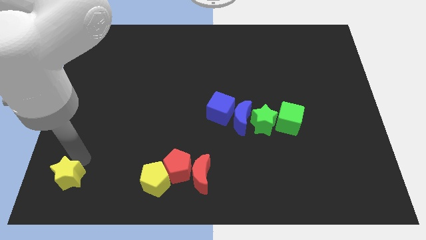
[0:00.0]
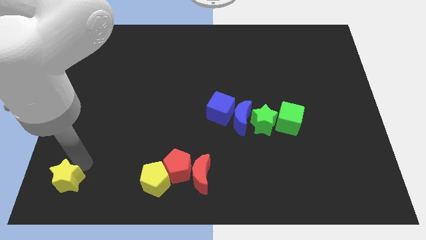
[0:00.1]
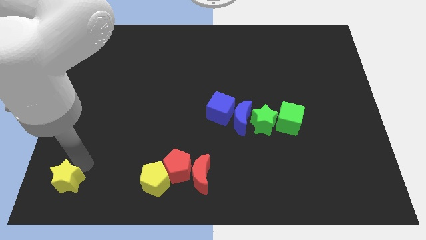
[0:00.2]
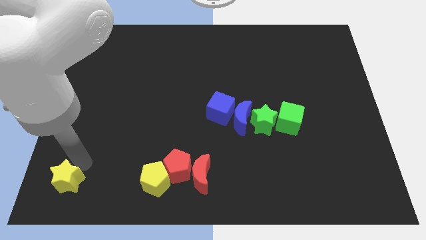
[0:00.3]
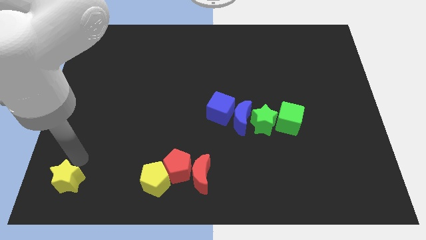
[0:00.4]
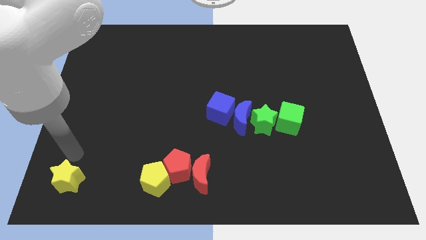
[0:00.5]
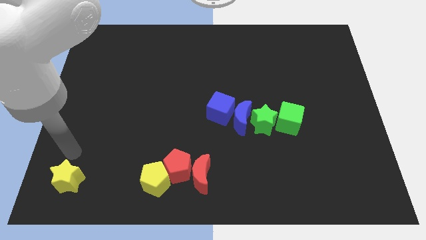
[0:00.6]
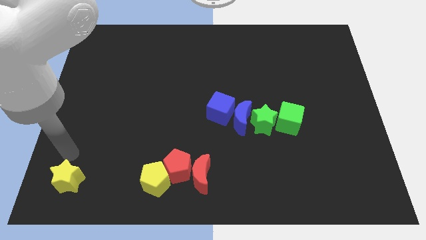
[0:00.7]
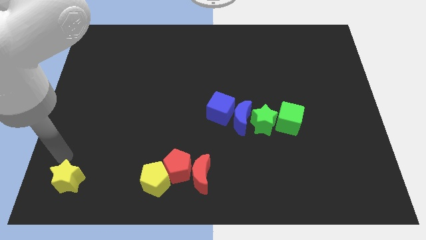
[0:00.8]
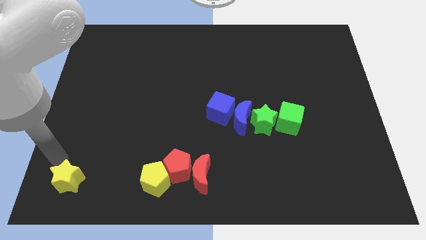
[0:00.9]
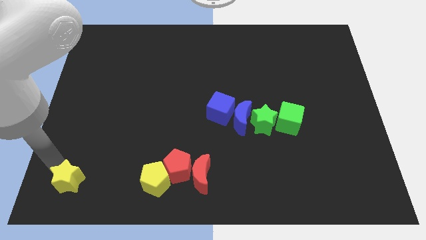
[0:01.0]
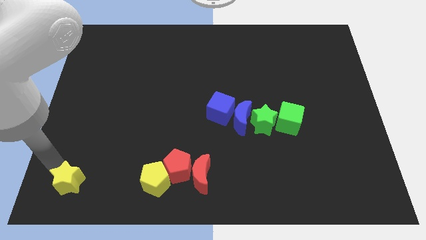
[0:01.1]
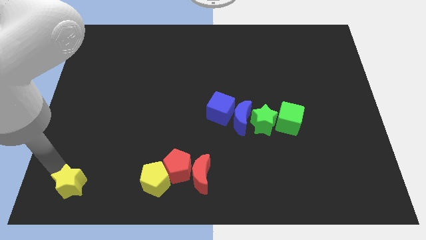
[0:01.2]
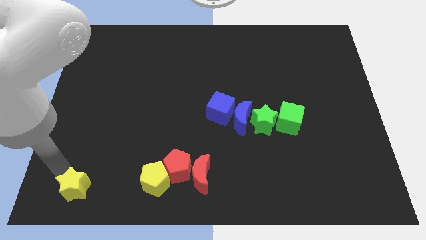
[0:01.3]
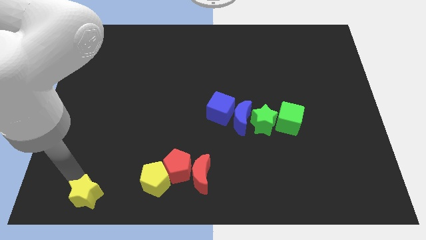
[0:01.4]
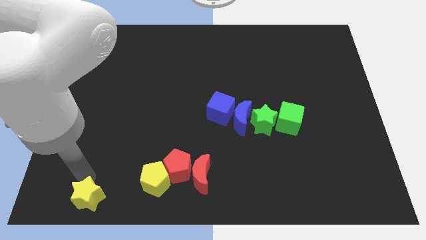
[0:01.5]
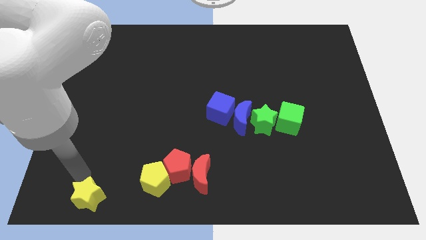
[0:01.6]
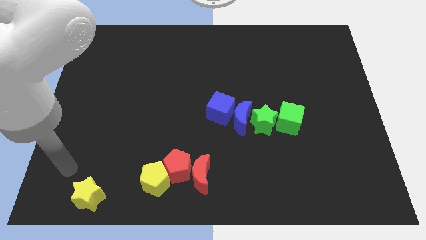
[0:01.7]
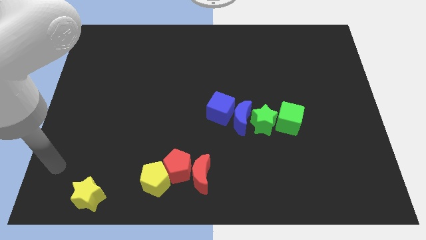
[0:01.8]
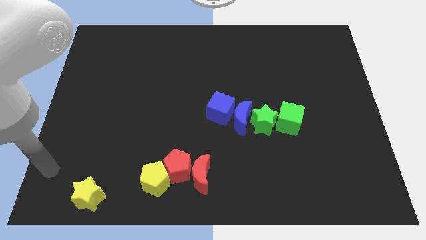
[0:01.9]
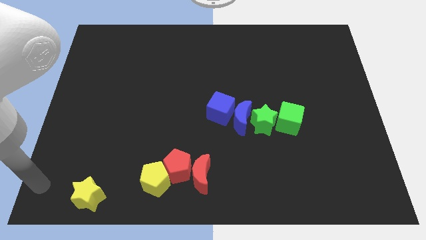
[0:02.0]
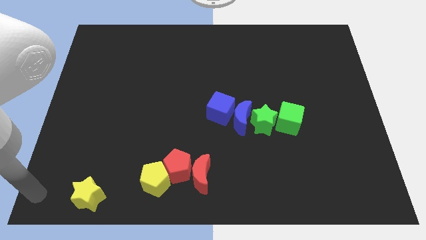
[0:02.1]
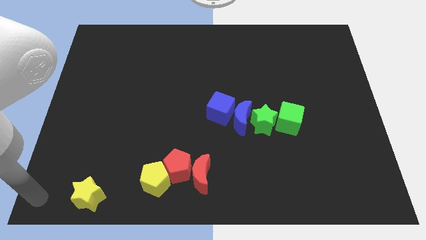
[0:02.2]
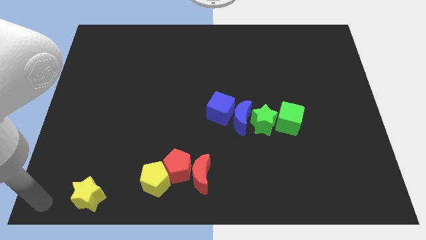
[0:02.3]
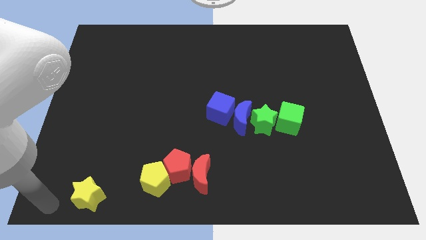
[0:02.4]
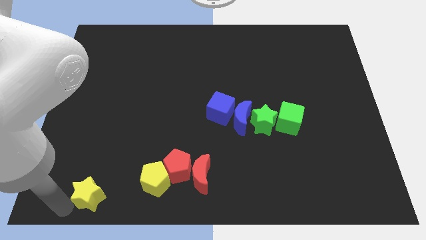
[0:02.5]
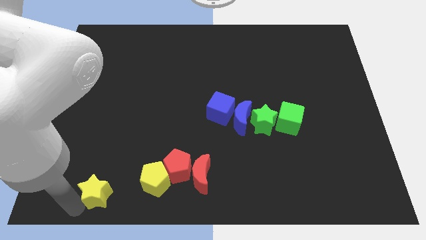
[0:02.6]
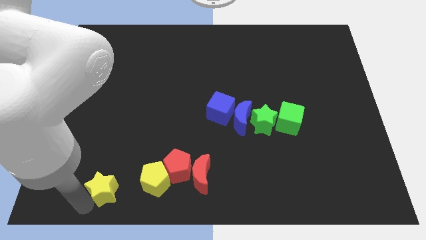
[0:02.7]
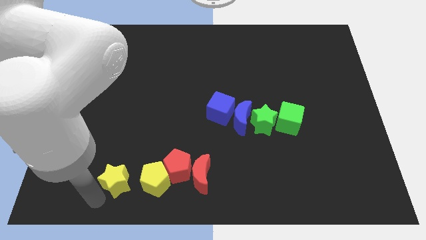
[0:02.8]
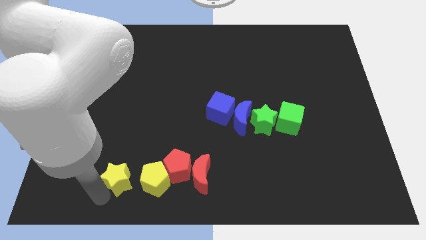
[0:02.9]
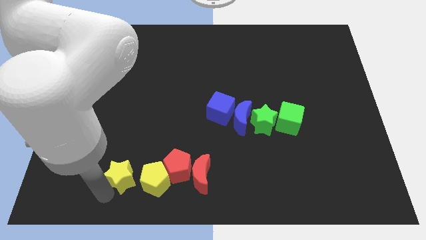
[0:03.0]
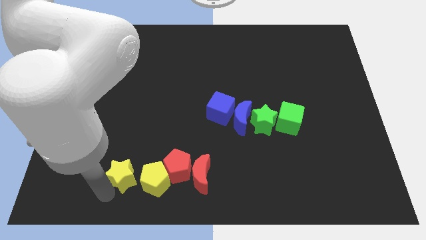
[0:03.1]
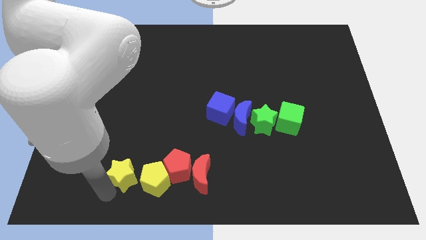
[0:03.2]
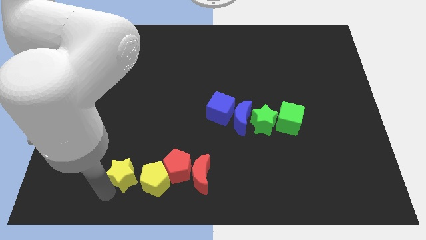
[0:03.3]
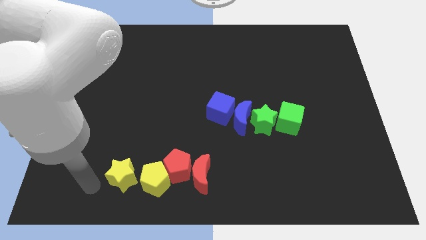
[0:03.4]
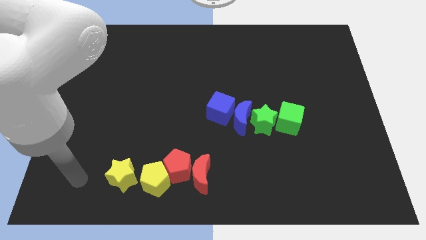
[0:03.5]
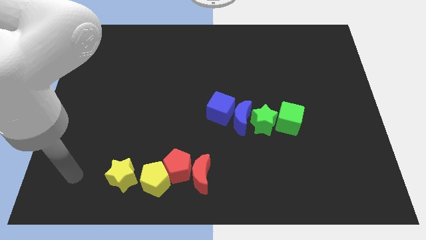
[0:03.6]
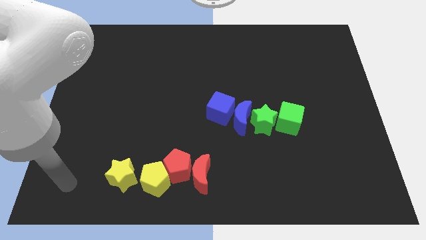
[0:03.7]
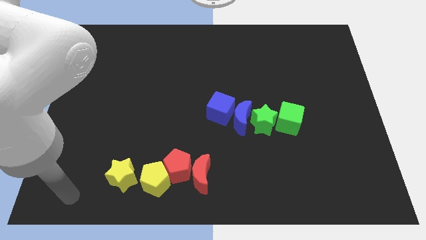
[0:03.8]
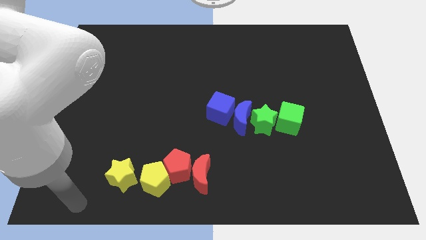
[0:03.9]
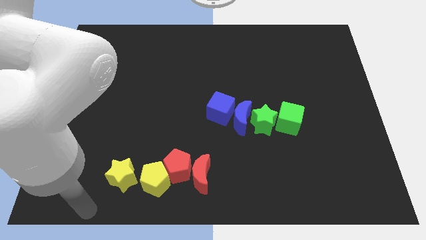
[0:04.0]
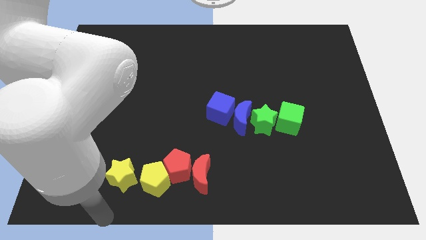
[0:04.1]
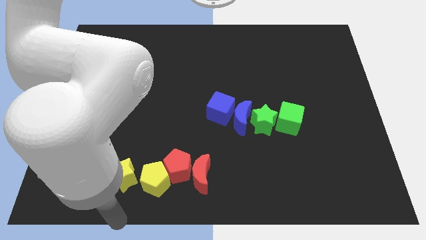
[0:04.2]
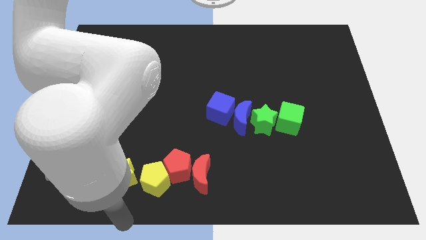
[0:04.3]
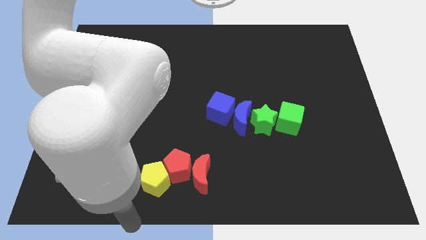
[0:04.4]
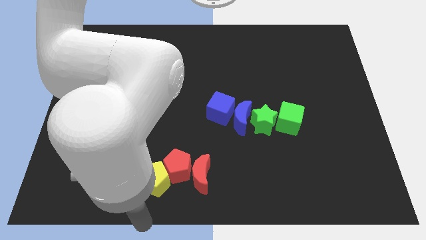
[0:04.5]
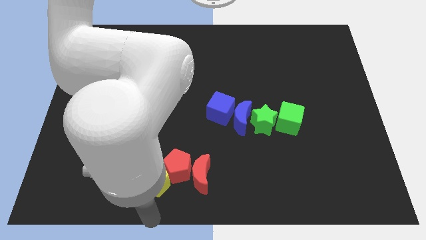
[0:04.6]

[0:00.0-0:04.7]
put the yellow star on the left side of the yellow pentagon

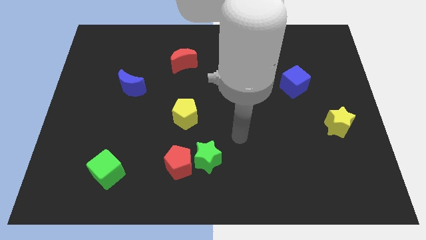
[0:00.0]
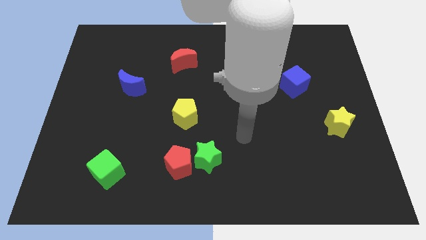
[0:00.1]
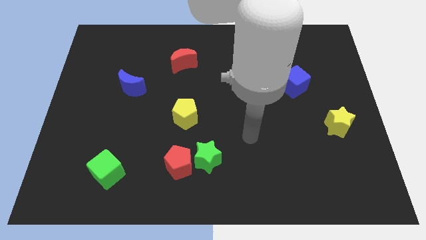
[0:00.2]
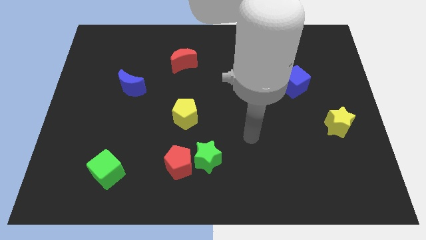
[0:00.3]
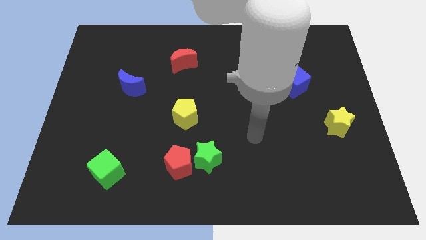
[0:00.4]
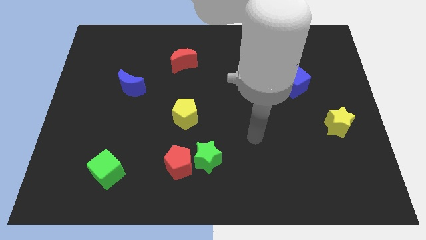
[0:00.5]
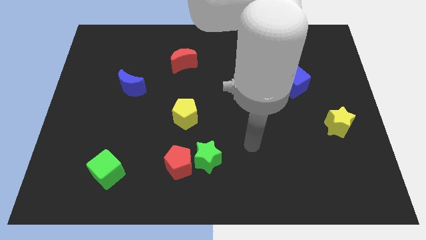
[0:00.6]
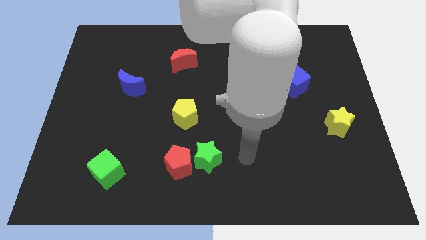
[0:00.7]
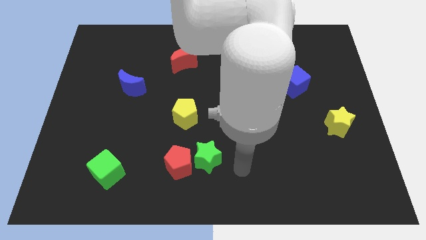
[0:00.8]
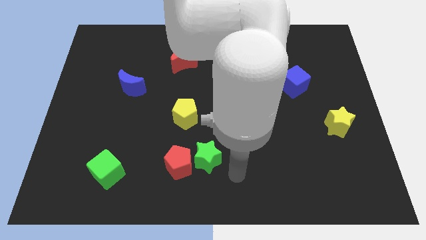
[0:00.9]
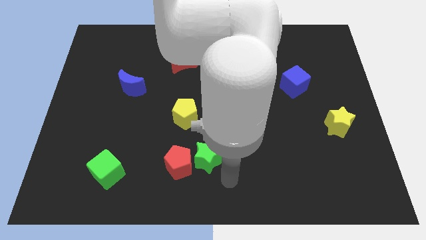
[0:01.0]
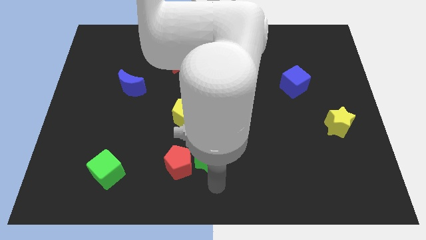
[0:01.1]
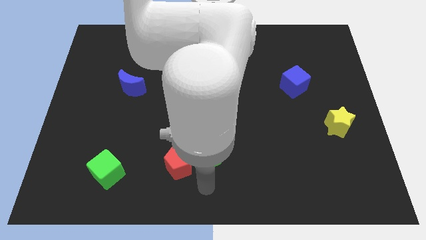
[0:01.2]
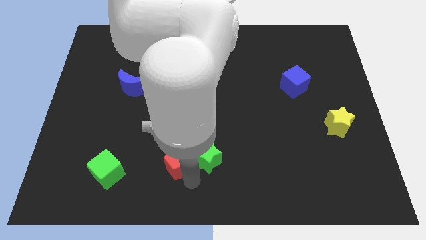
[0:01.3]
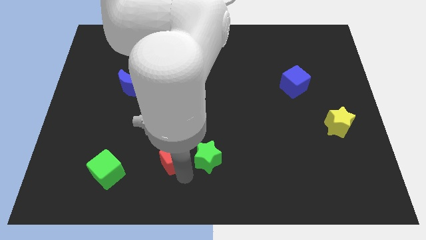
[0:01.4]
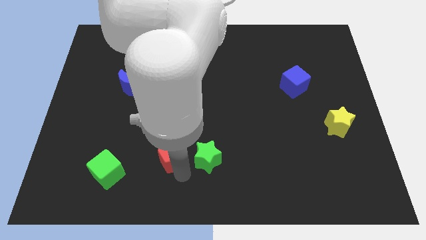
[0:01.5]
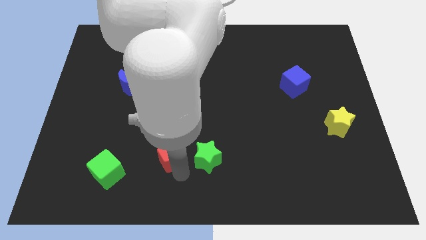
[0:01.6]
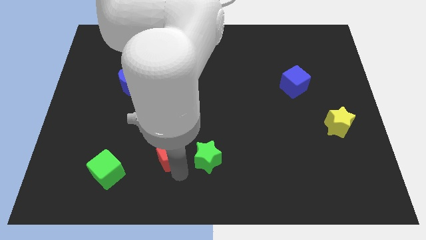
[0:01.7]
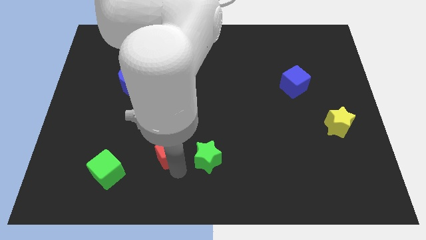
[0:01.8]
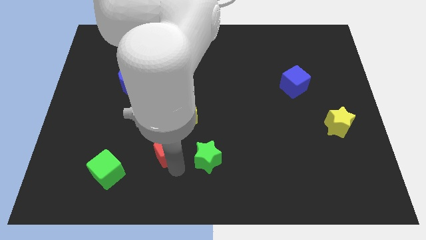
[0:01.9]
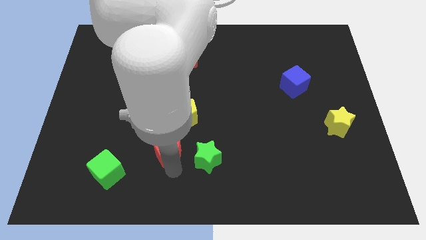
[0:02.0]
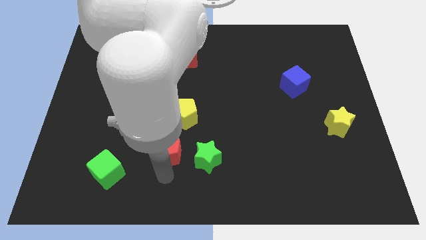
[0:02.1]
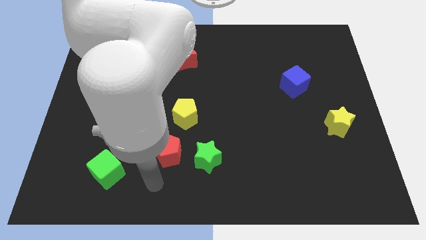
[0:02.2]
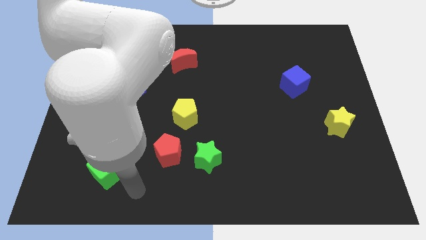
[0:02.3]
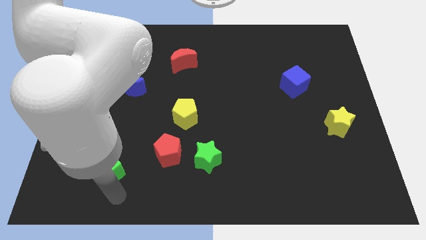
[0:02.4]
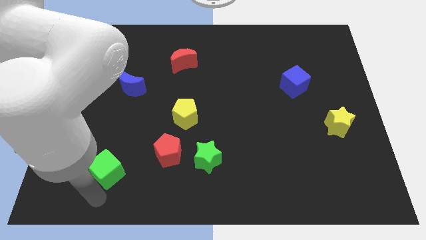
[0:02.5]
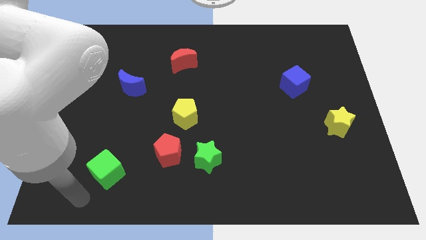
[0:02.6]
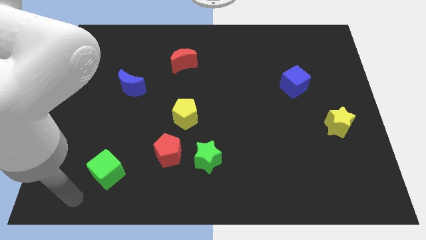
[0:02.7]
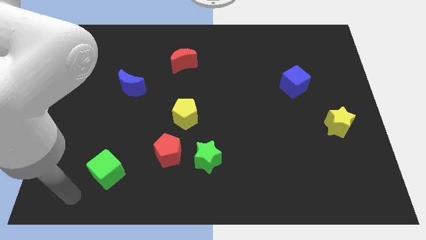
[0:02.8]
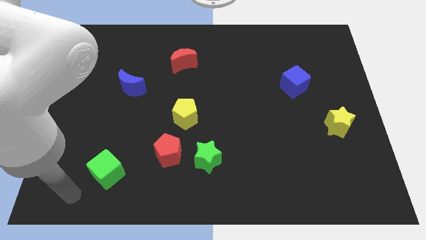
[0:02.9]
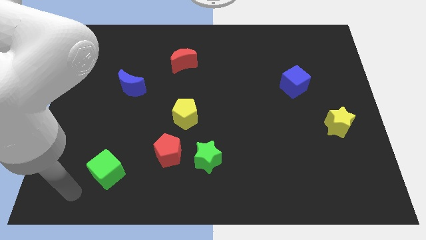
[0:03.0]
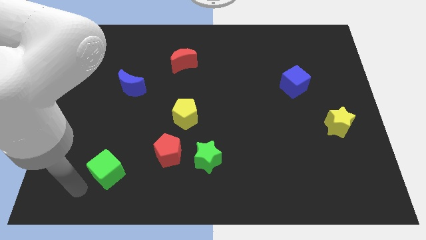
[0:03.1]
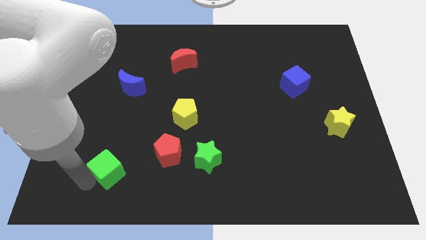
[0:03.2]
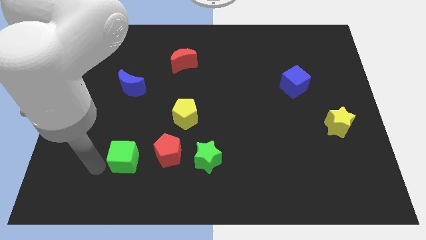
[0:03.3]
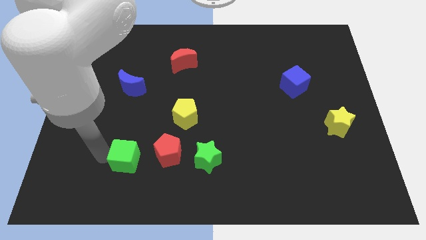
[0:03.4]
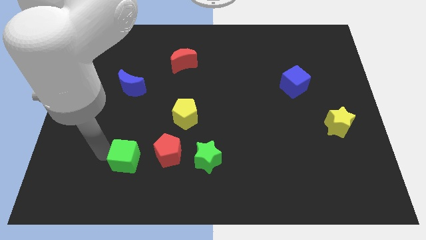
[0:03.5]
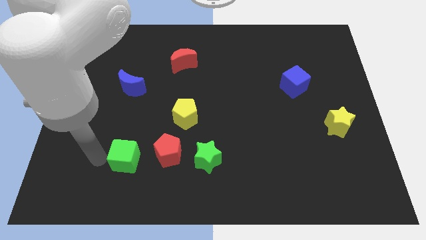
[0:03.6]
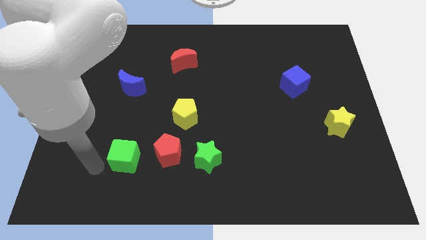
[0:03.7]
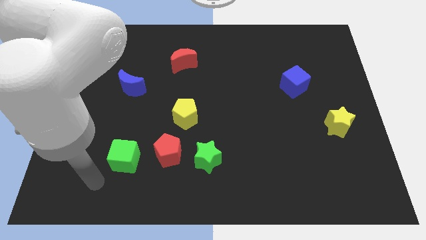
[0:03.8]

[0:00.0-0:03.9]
move the red pentagon and green cube bottom center

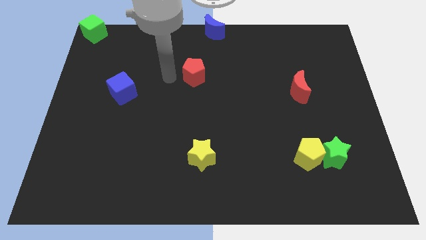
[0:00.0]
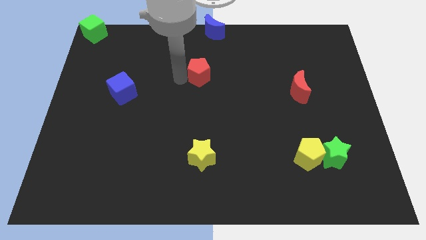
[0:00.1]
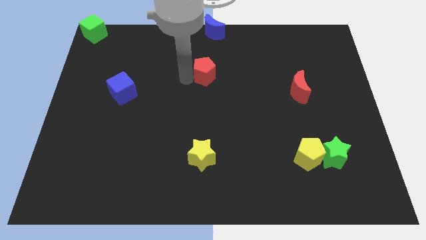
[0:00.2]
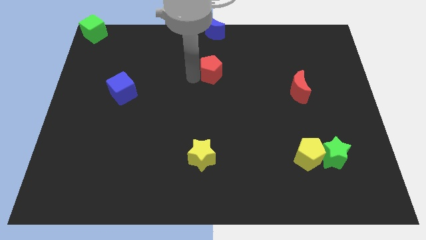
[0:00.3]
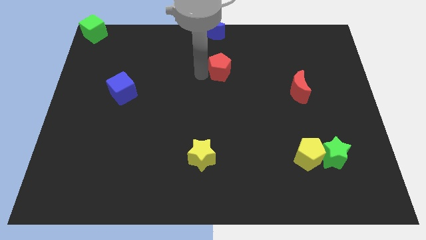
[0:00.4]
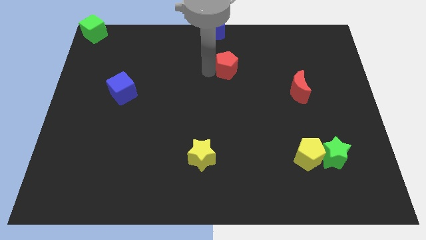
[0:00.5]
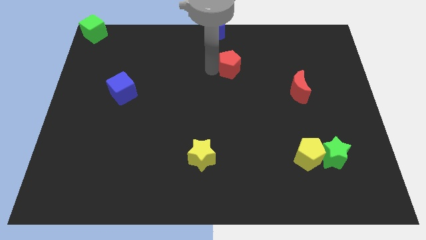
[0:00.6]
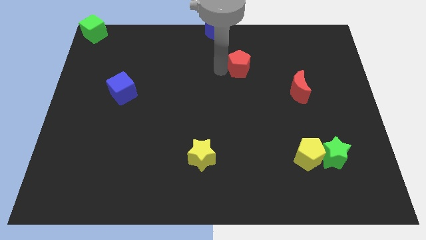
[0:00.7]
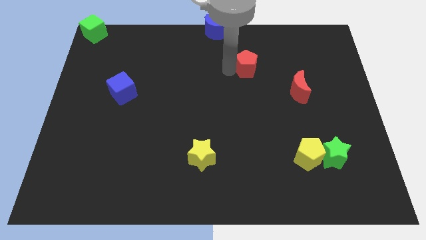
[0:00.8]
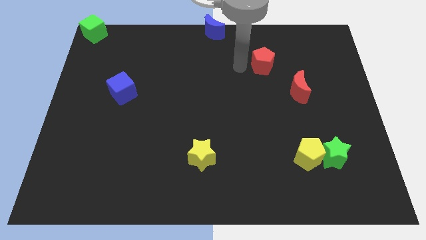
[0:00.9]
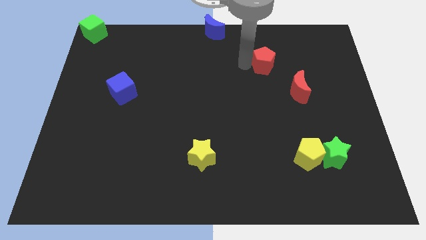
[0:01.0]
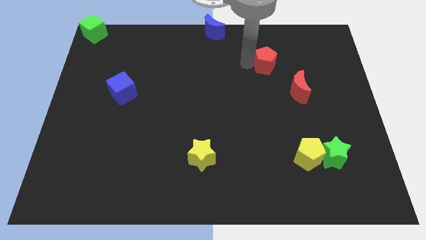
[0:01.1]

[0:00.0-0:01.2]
move red pentagon towards the red moon
